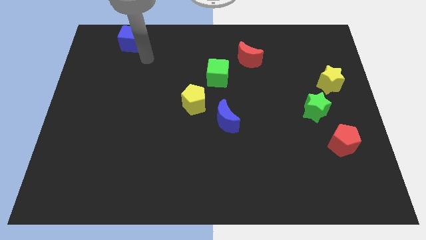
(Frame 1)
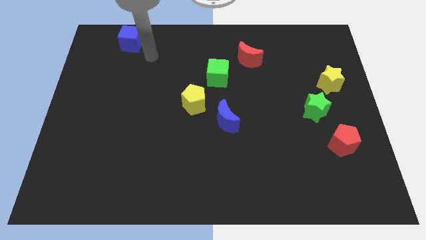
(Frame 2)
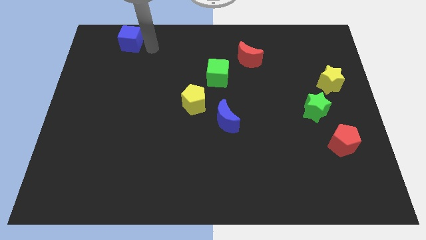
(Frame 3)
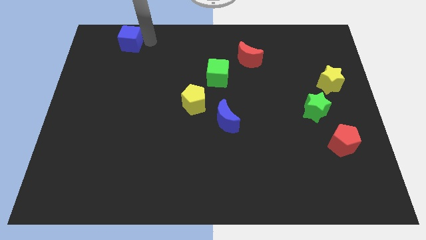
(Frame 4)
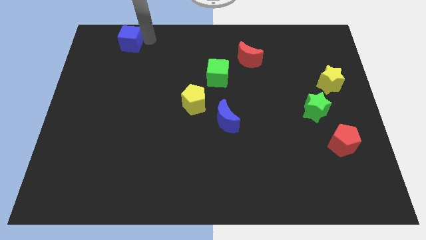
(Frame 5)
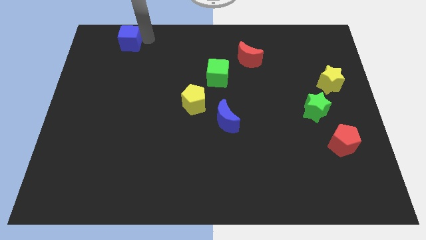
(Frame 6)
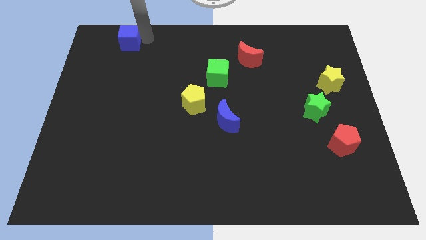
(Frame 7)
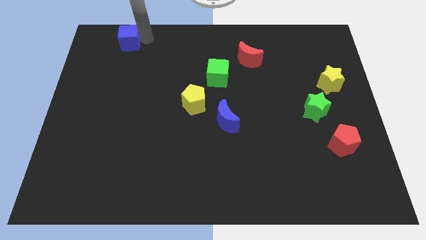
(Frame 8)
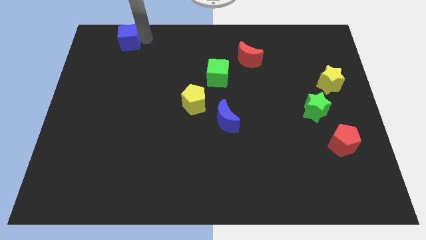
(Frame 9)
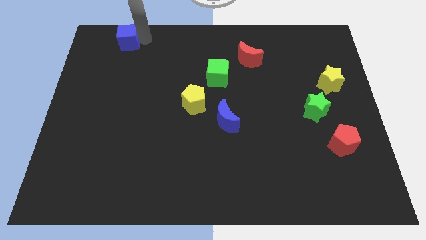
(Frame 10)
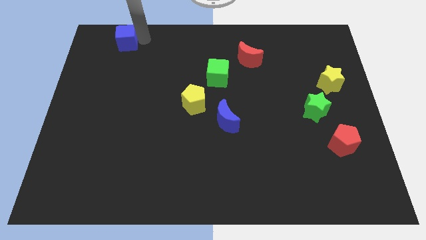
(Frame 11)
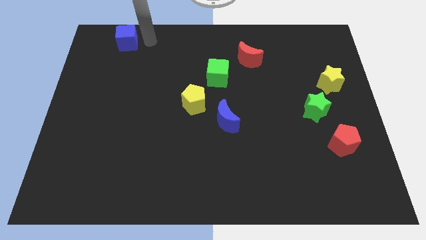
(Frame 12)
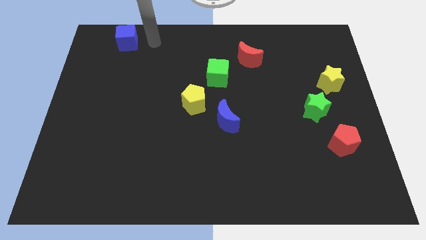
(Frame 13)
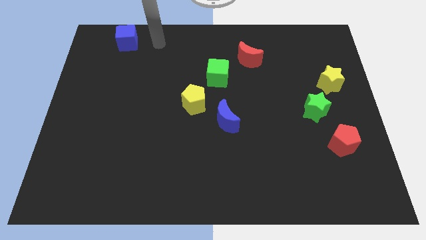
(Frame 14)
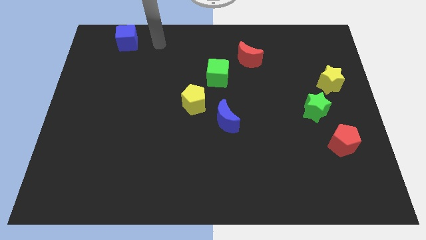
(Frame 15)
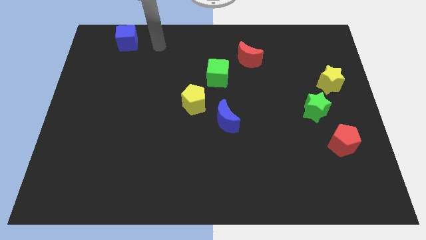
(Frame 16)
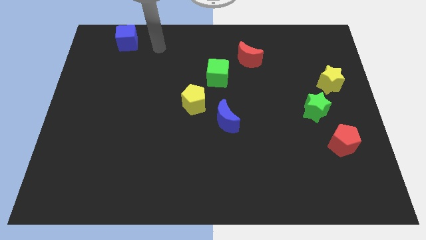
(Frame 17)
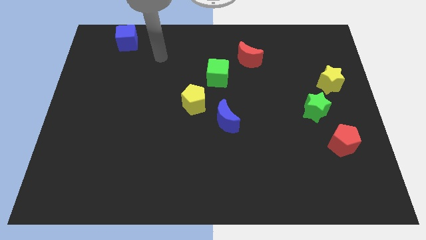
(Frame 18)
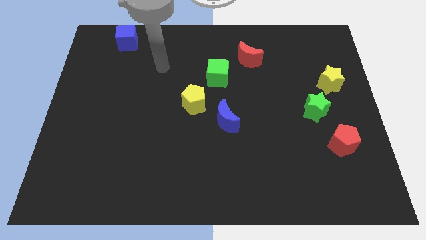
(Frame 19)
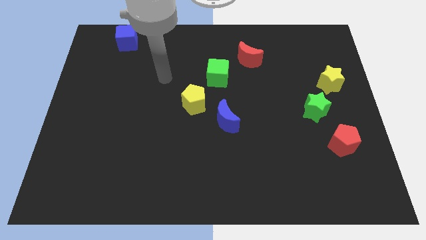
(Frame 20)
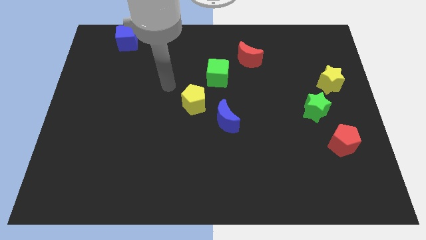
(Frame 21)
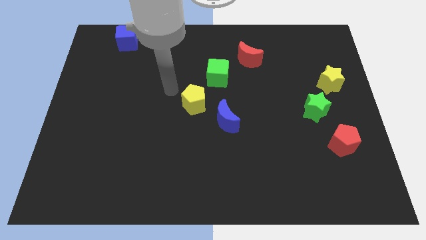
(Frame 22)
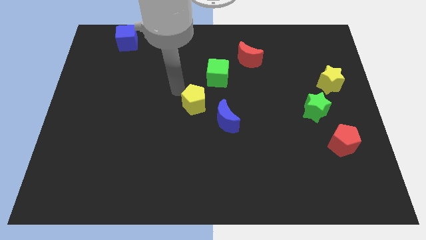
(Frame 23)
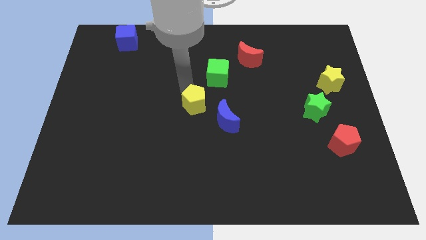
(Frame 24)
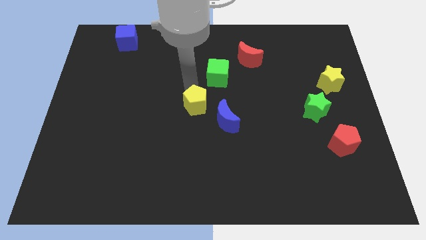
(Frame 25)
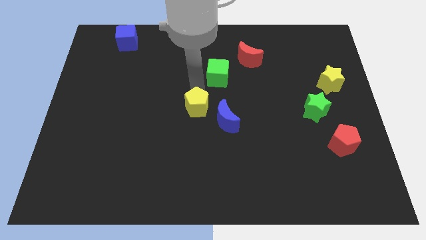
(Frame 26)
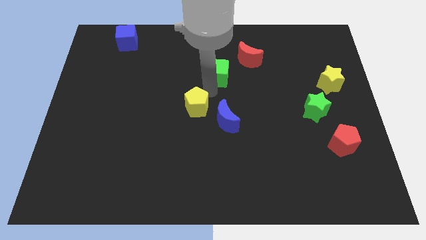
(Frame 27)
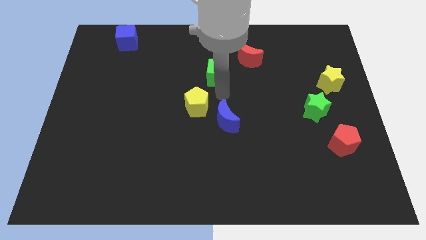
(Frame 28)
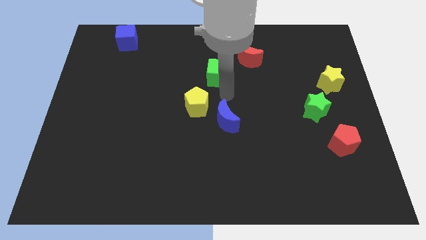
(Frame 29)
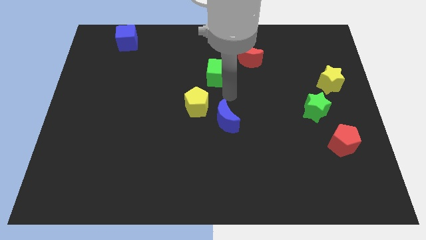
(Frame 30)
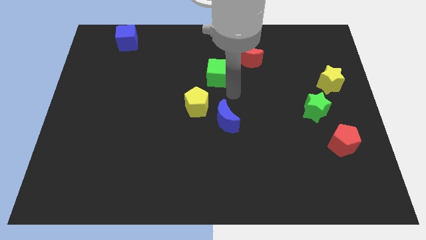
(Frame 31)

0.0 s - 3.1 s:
slightly move the blue cube and the yellow pentagon

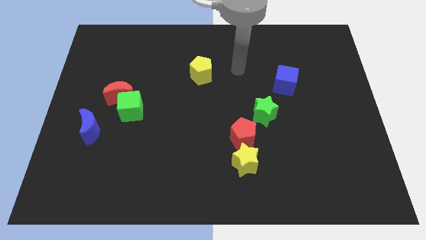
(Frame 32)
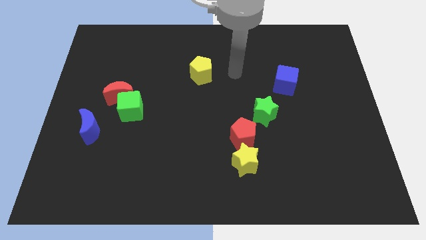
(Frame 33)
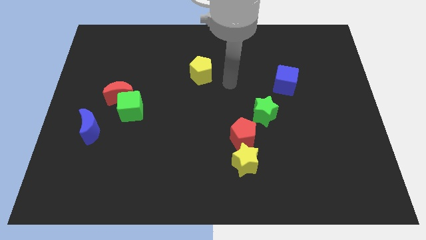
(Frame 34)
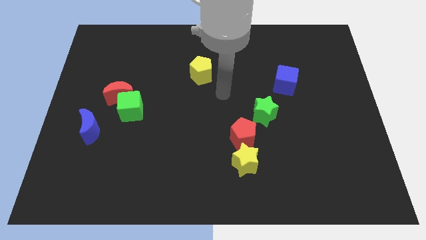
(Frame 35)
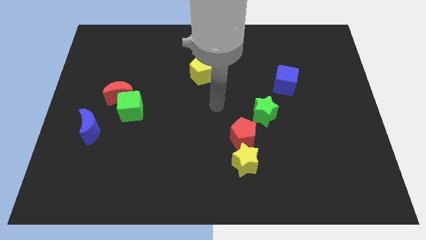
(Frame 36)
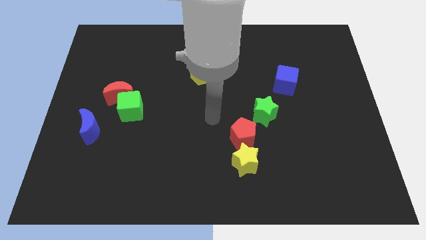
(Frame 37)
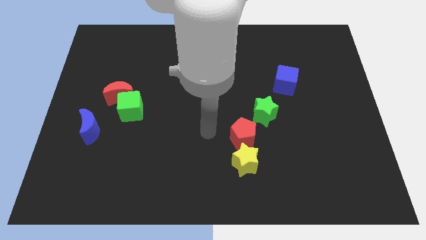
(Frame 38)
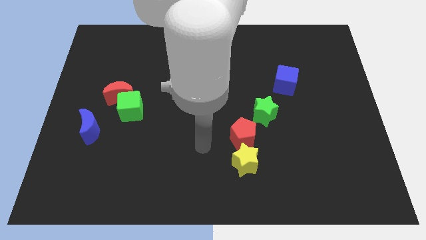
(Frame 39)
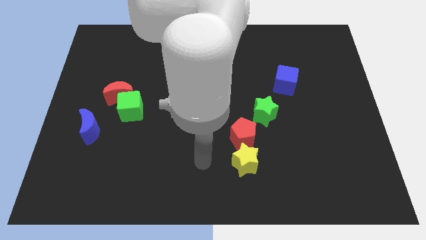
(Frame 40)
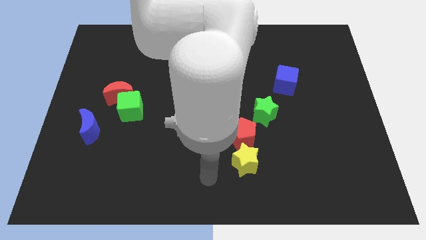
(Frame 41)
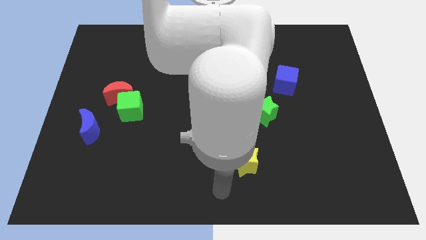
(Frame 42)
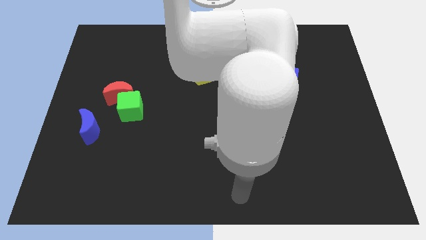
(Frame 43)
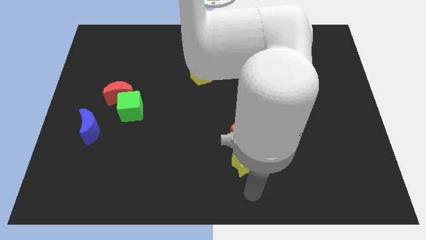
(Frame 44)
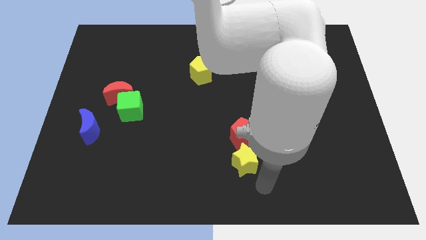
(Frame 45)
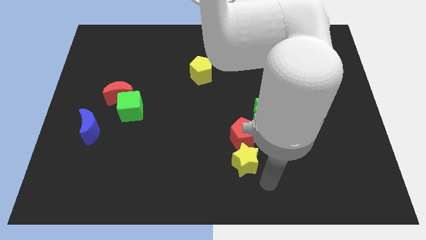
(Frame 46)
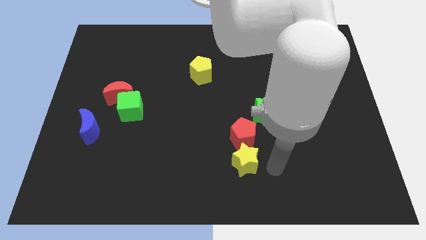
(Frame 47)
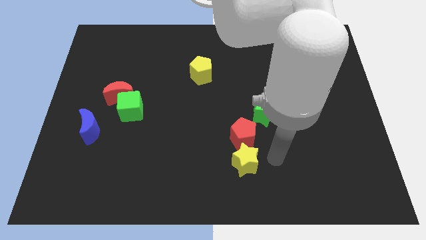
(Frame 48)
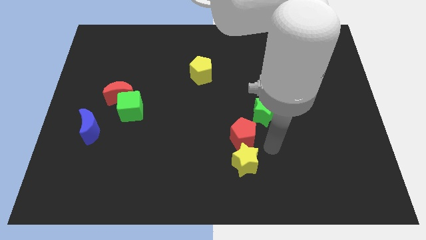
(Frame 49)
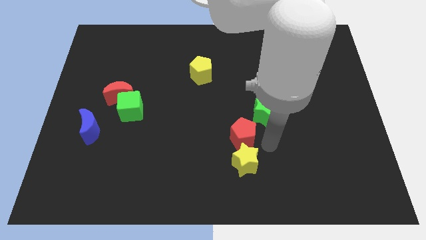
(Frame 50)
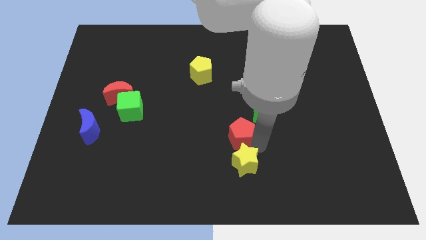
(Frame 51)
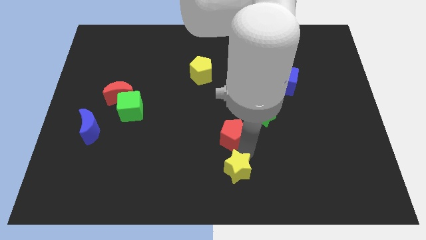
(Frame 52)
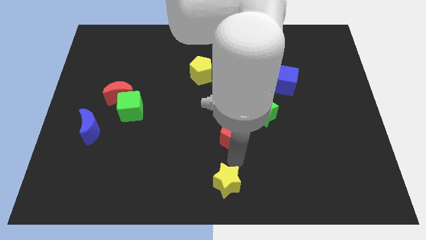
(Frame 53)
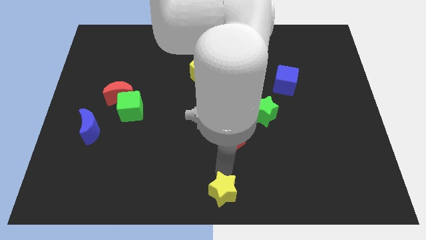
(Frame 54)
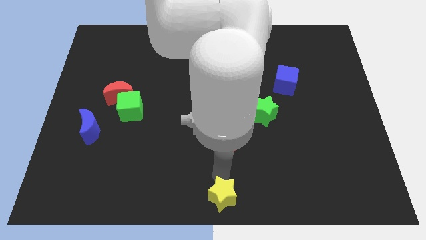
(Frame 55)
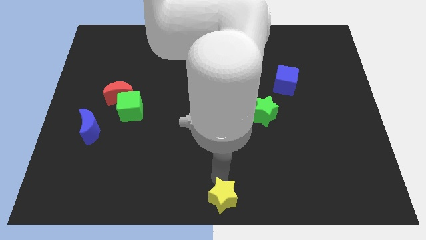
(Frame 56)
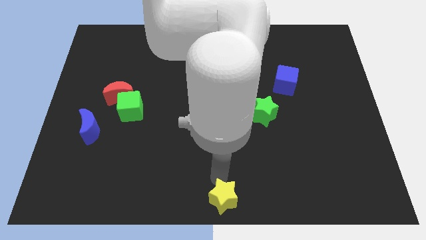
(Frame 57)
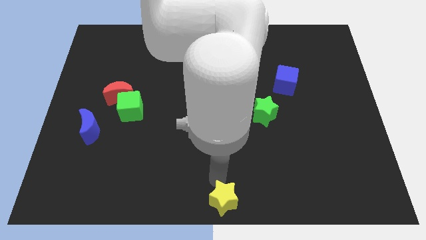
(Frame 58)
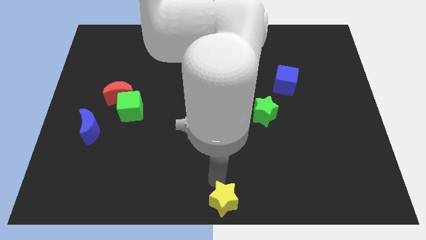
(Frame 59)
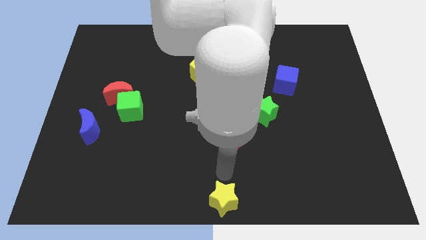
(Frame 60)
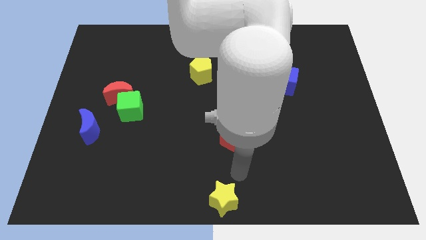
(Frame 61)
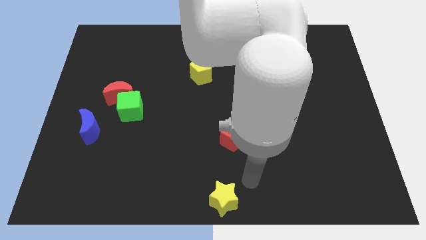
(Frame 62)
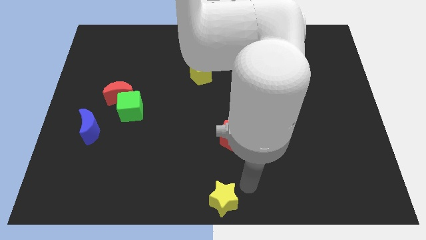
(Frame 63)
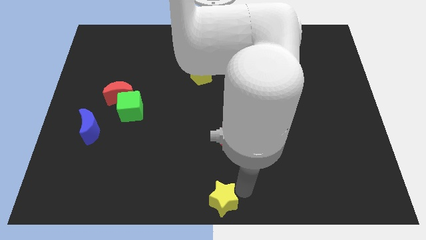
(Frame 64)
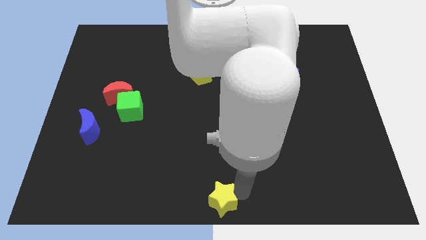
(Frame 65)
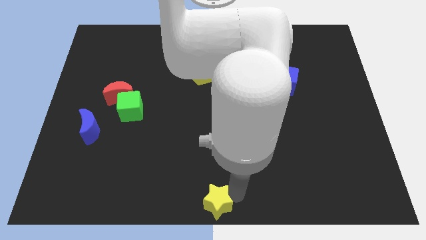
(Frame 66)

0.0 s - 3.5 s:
move the yellow star to the bottom center of the board

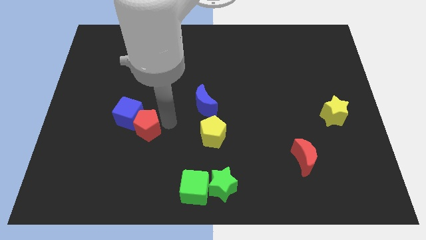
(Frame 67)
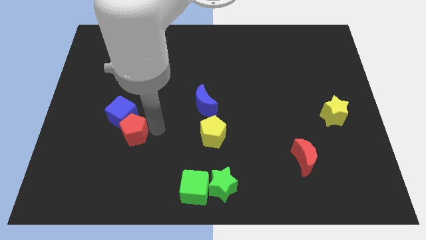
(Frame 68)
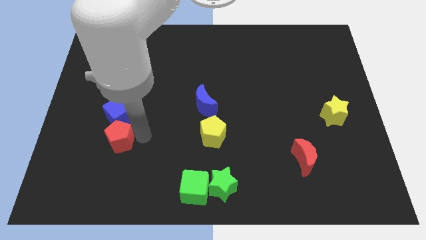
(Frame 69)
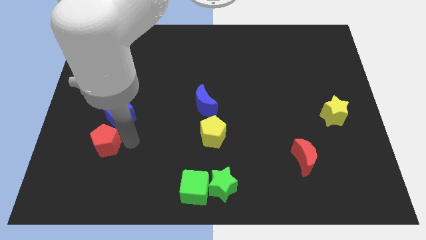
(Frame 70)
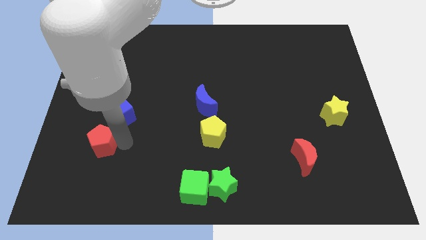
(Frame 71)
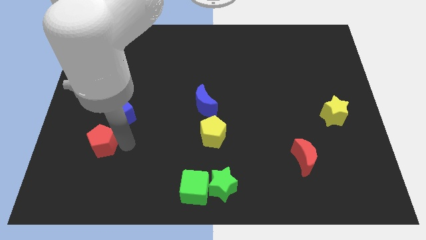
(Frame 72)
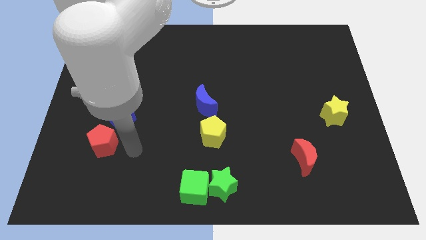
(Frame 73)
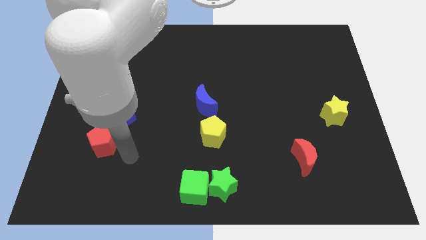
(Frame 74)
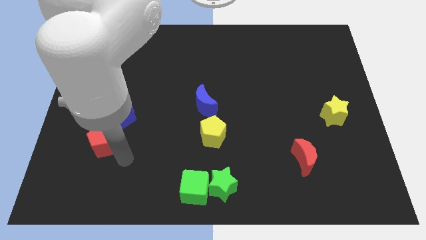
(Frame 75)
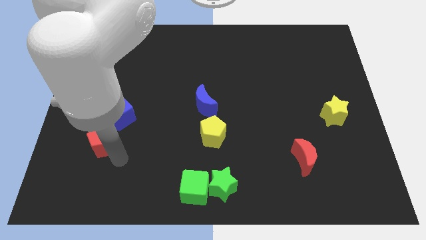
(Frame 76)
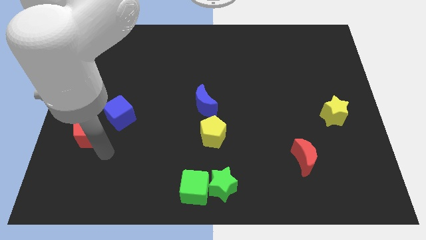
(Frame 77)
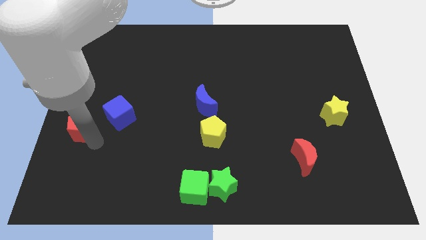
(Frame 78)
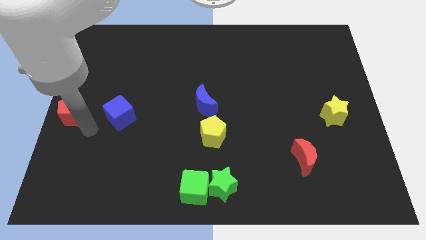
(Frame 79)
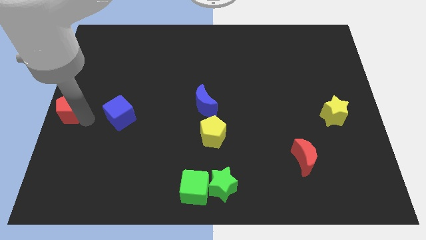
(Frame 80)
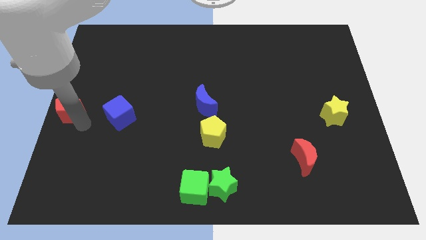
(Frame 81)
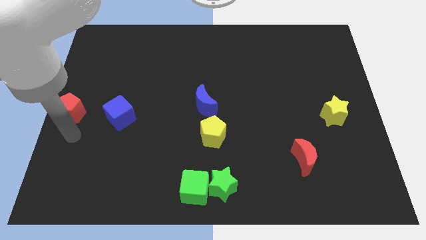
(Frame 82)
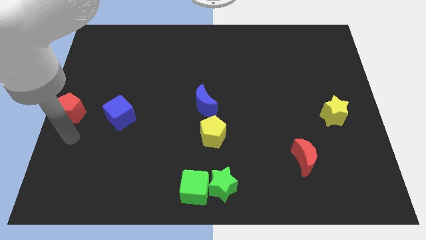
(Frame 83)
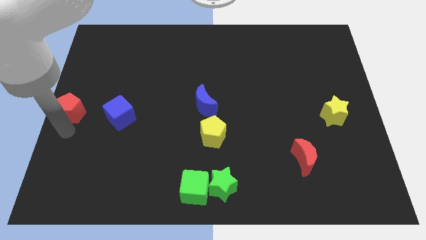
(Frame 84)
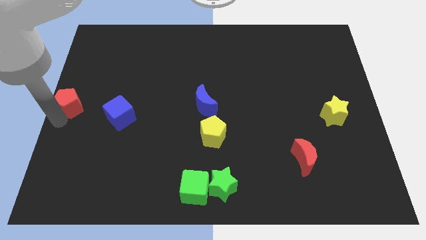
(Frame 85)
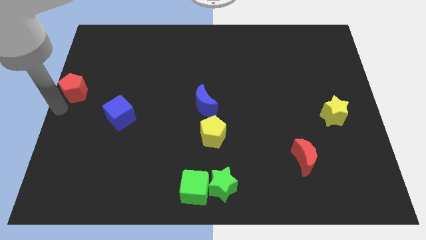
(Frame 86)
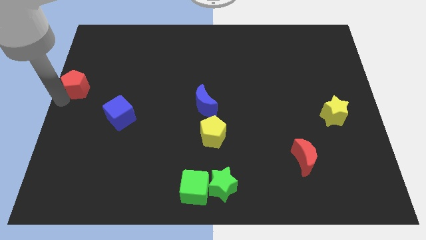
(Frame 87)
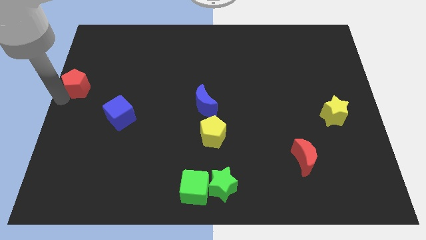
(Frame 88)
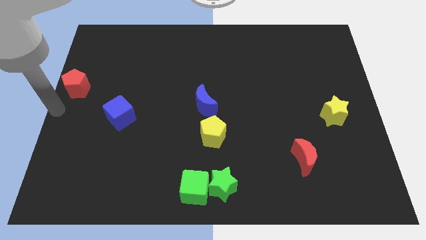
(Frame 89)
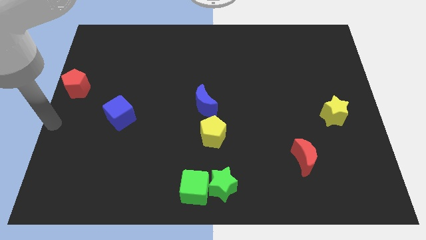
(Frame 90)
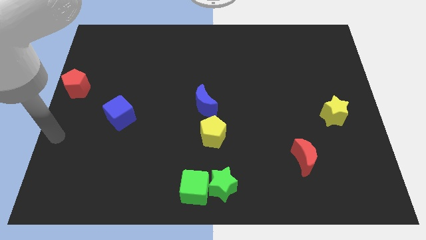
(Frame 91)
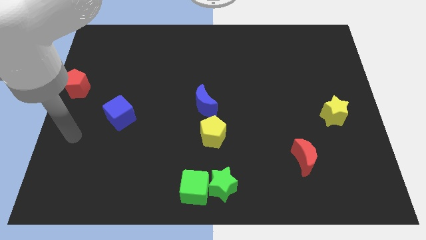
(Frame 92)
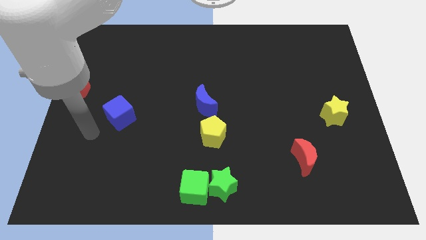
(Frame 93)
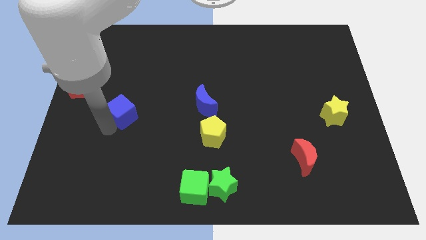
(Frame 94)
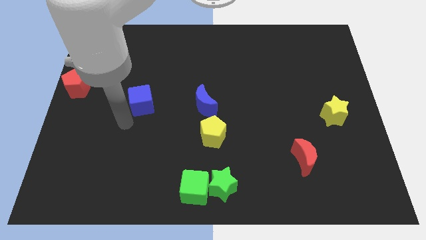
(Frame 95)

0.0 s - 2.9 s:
place the red pentagon to center left
